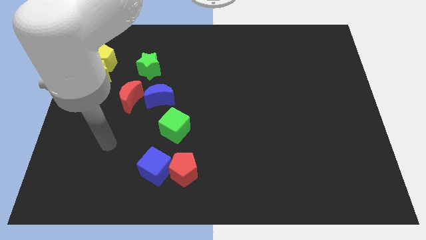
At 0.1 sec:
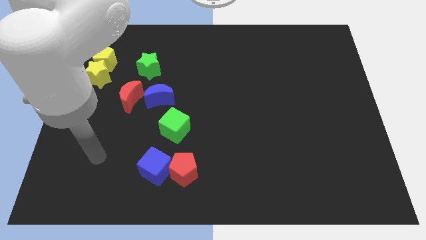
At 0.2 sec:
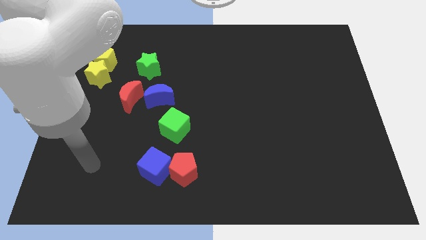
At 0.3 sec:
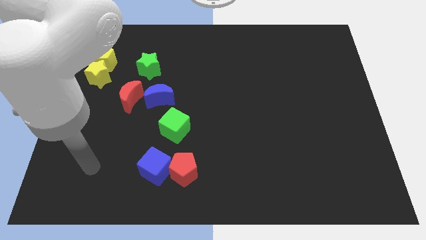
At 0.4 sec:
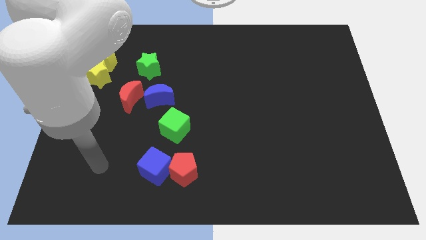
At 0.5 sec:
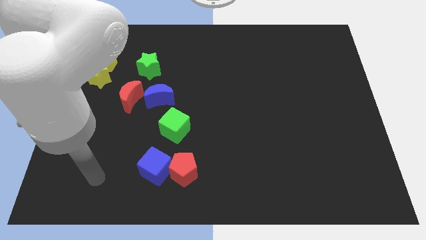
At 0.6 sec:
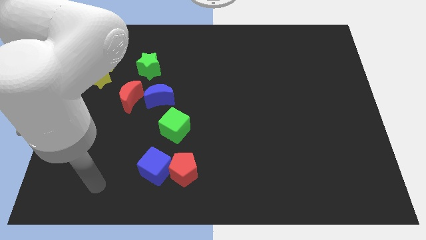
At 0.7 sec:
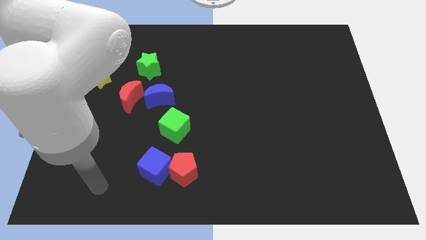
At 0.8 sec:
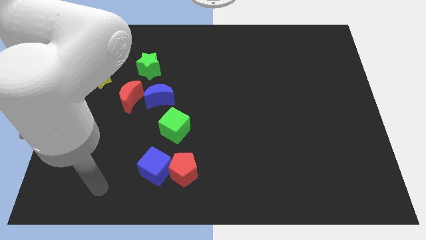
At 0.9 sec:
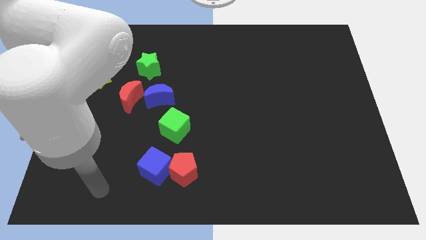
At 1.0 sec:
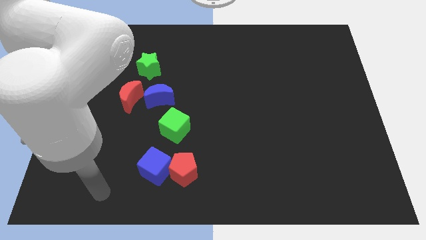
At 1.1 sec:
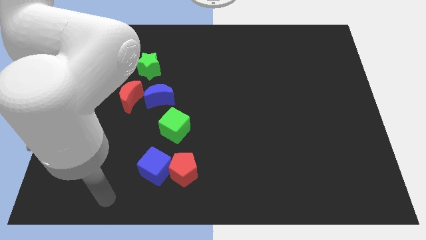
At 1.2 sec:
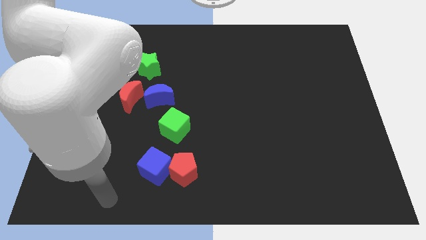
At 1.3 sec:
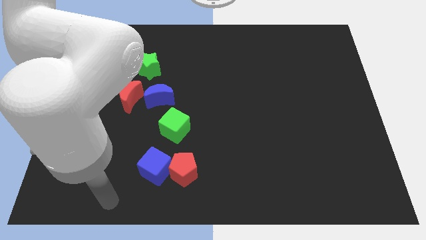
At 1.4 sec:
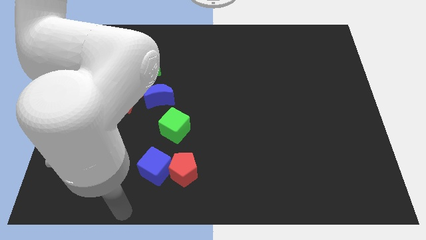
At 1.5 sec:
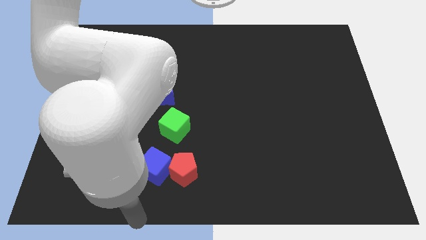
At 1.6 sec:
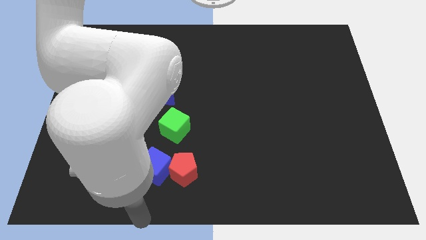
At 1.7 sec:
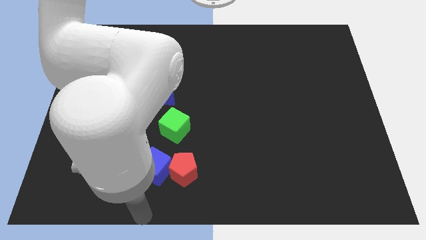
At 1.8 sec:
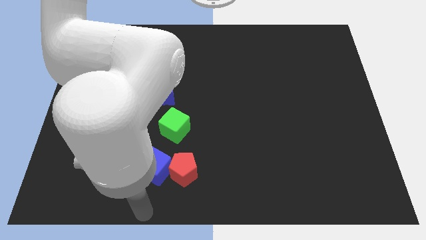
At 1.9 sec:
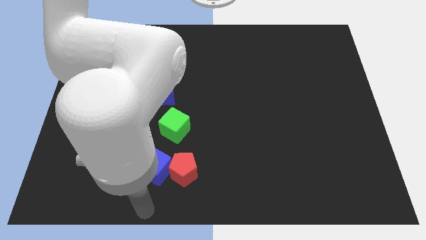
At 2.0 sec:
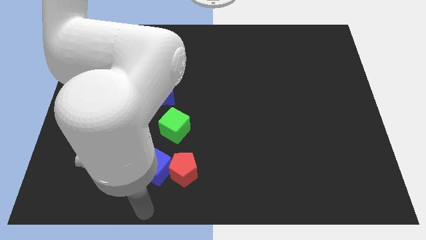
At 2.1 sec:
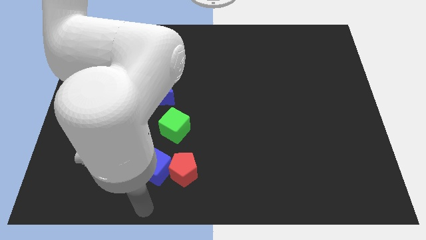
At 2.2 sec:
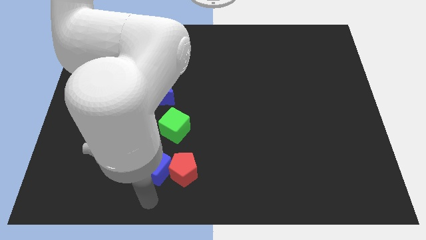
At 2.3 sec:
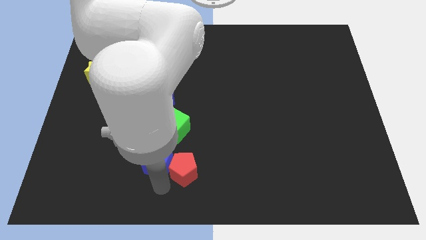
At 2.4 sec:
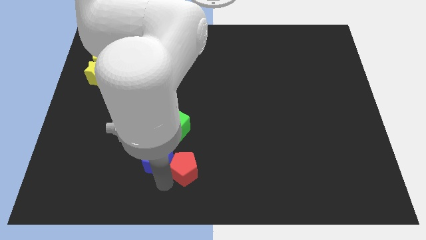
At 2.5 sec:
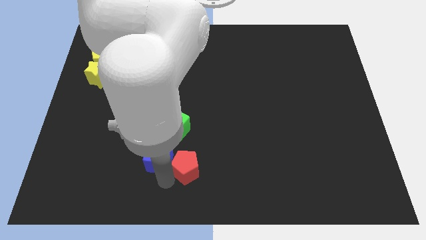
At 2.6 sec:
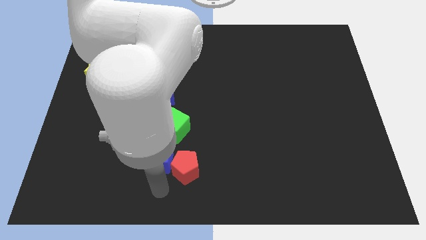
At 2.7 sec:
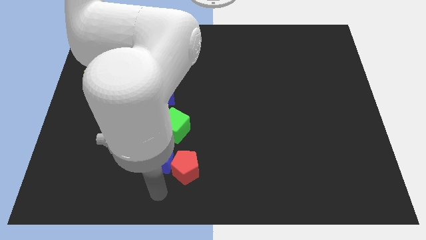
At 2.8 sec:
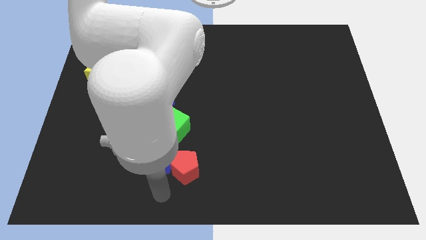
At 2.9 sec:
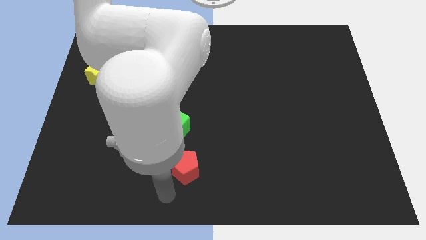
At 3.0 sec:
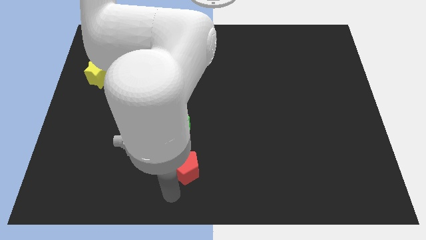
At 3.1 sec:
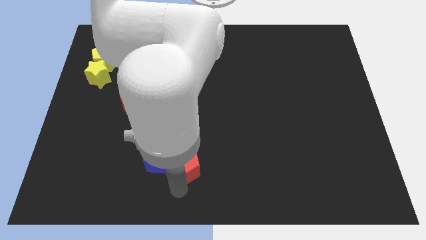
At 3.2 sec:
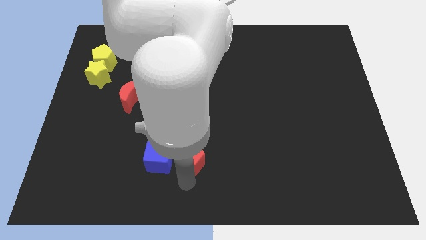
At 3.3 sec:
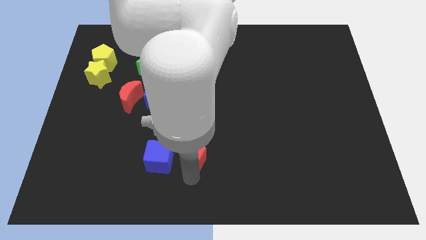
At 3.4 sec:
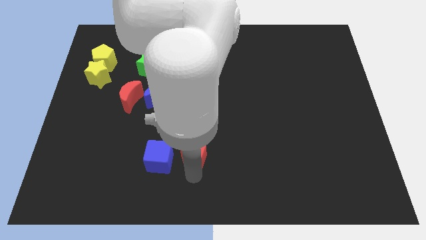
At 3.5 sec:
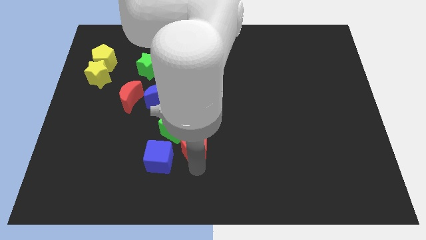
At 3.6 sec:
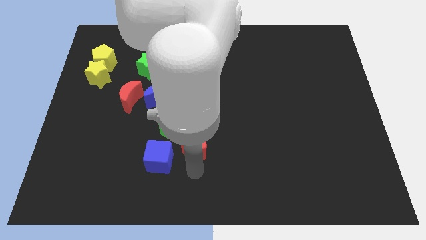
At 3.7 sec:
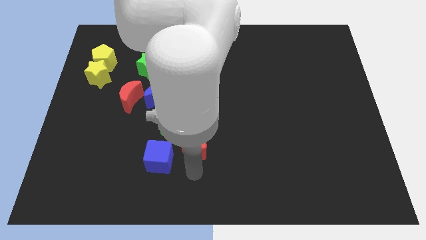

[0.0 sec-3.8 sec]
place the red pentagon below the green cube

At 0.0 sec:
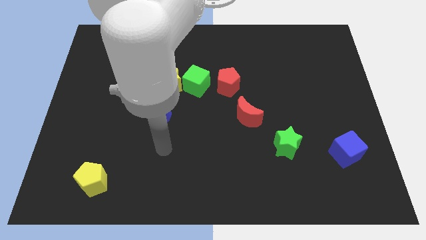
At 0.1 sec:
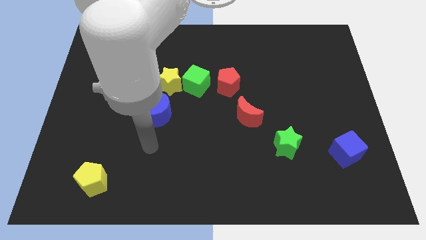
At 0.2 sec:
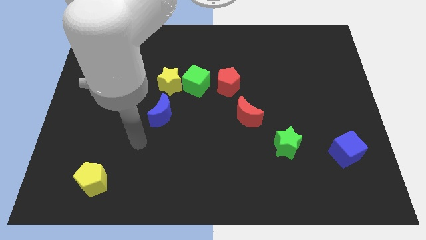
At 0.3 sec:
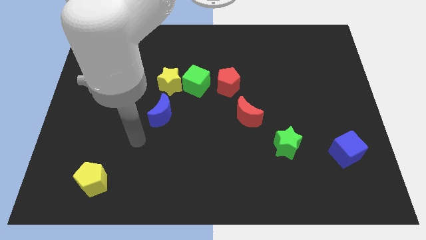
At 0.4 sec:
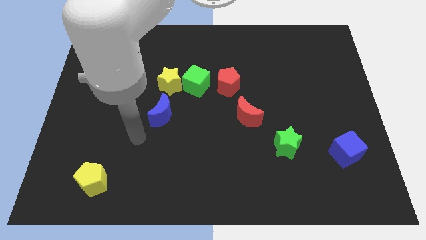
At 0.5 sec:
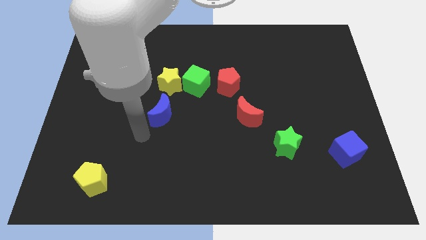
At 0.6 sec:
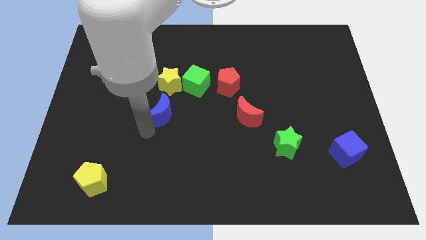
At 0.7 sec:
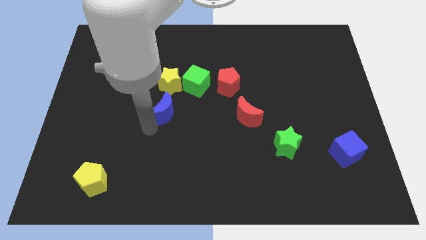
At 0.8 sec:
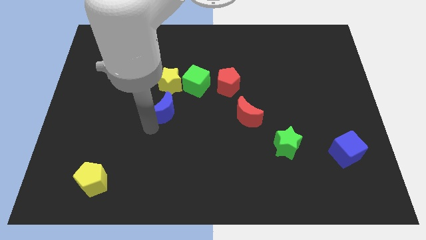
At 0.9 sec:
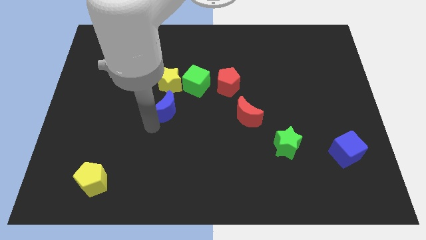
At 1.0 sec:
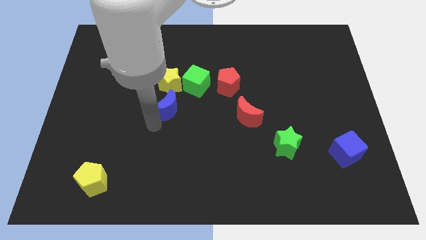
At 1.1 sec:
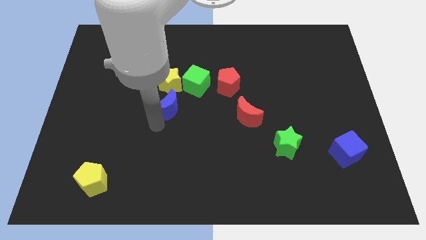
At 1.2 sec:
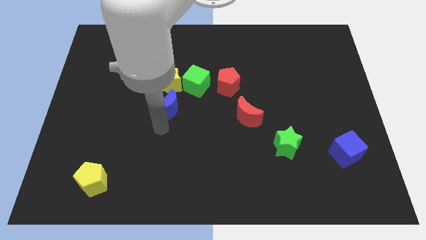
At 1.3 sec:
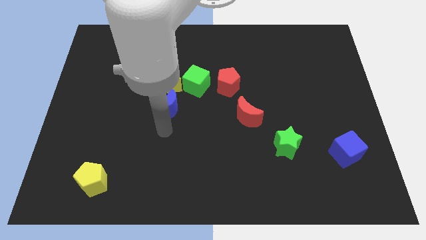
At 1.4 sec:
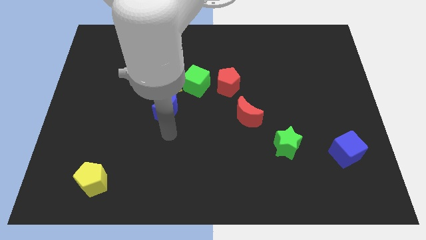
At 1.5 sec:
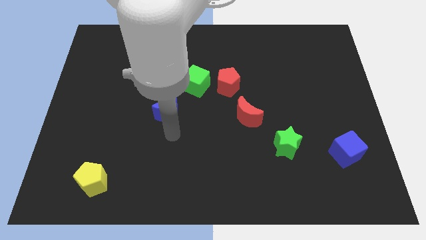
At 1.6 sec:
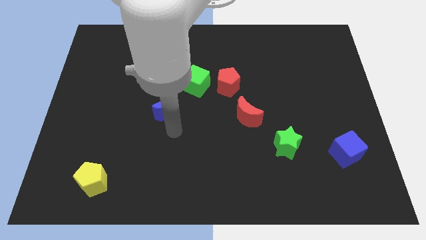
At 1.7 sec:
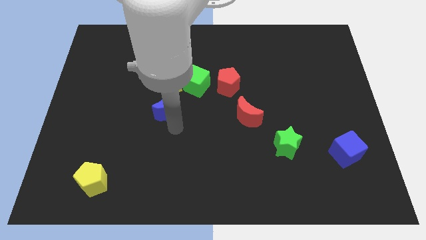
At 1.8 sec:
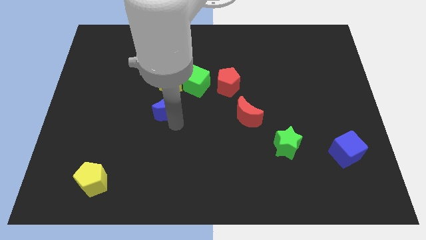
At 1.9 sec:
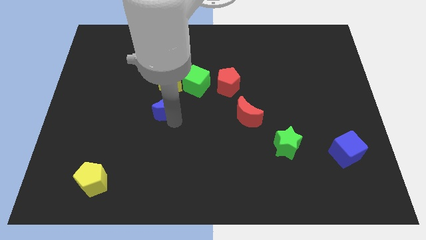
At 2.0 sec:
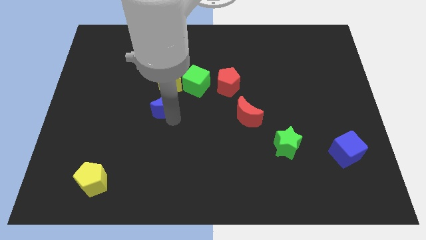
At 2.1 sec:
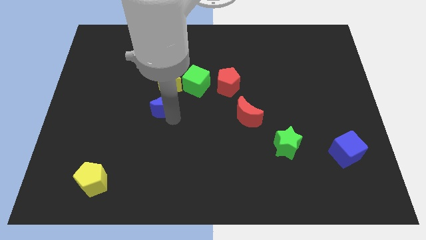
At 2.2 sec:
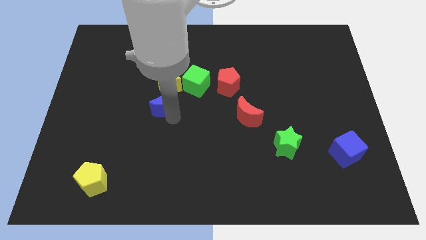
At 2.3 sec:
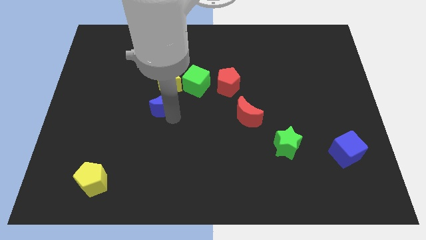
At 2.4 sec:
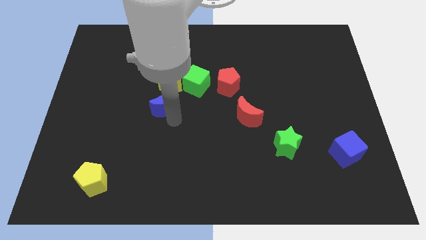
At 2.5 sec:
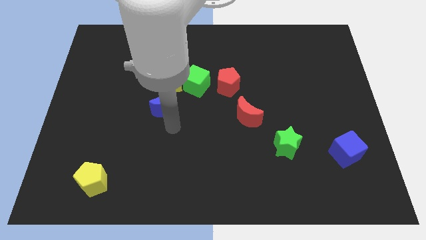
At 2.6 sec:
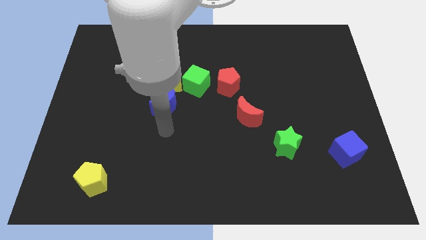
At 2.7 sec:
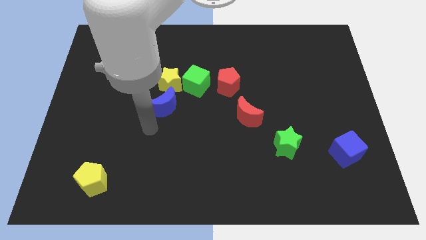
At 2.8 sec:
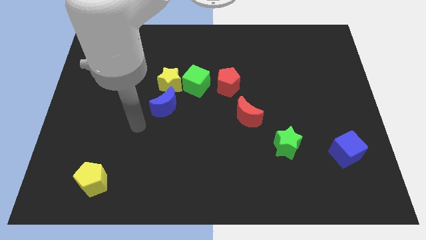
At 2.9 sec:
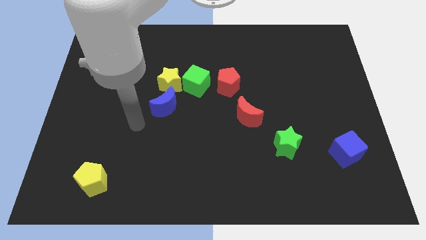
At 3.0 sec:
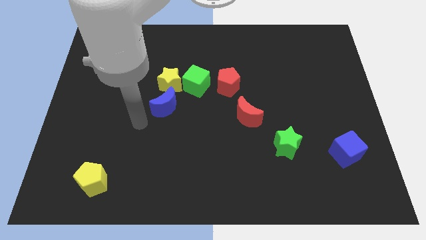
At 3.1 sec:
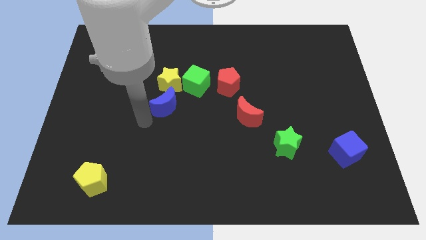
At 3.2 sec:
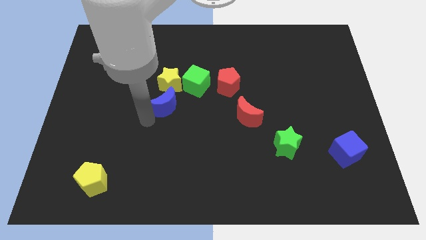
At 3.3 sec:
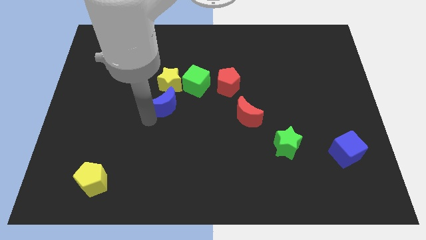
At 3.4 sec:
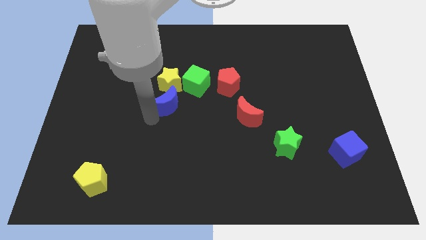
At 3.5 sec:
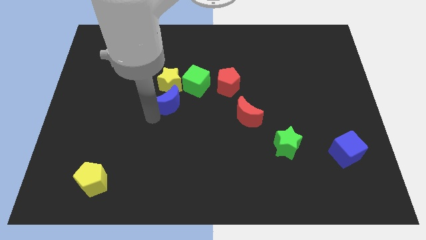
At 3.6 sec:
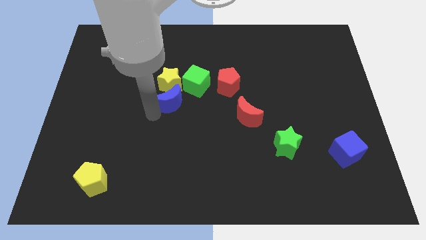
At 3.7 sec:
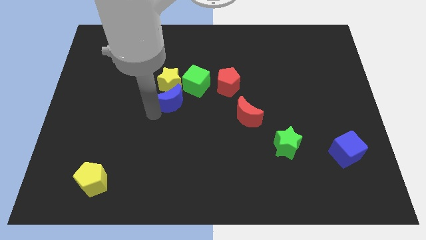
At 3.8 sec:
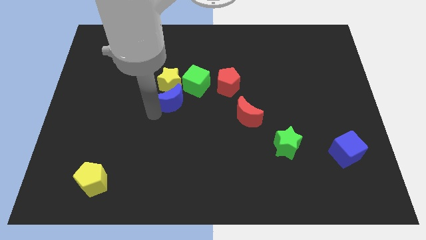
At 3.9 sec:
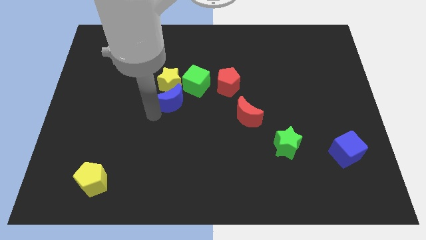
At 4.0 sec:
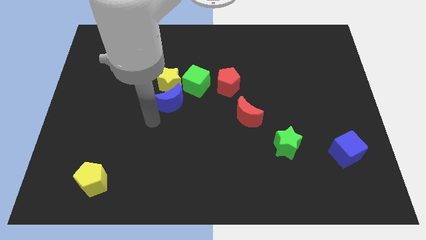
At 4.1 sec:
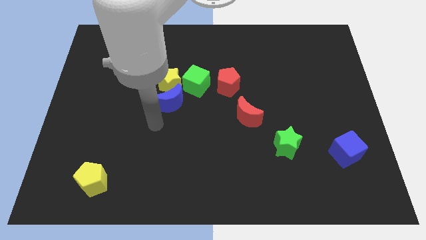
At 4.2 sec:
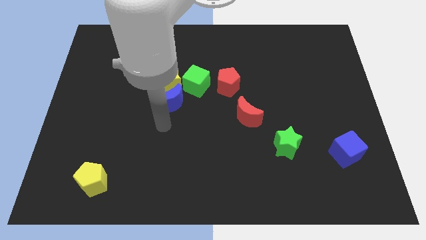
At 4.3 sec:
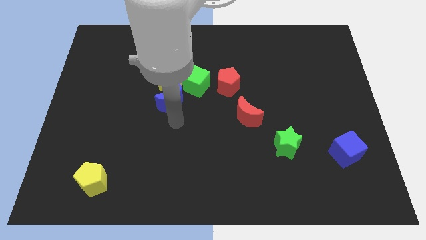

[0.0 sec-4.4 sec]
place blue moon at the bottom of the yellow star

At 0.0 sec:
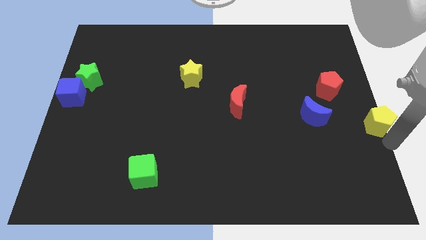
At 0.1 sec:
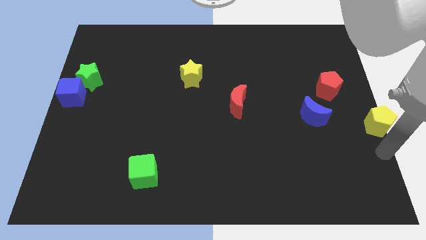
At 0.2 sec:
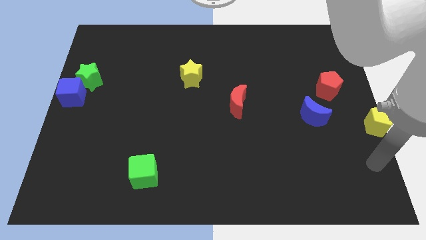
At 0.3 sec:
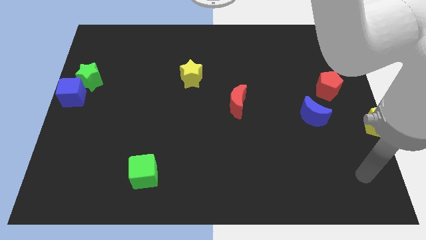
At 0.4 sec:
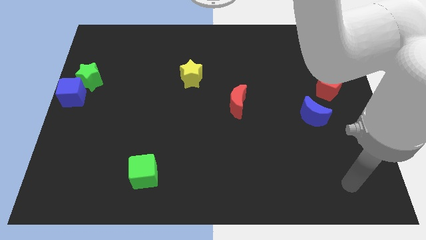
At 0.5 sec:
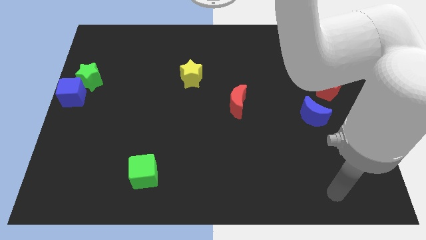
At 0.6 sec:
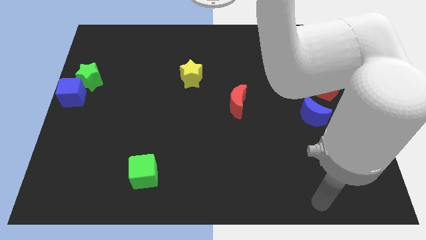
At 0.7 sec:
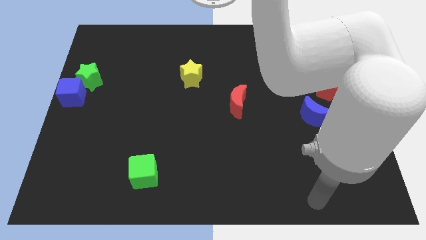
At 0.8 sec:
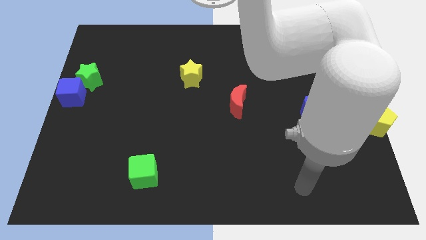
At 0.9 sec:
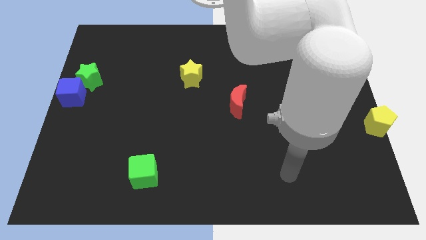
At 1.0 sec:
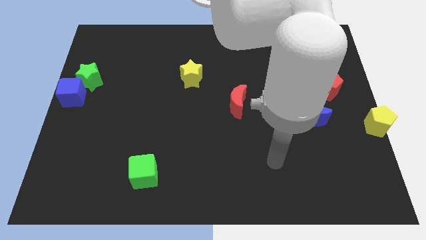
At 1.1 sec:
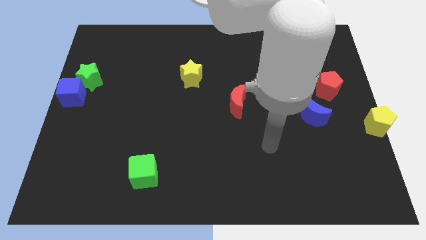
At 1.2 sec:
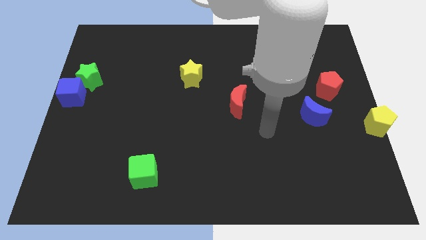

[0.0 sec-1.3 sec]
move your arm away from the yellow pentagon
